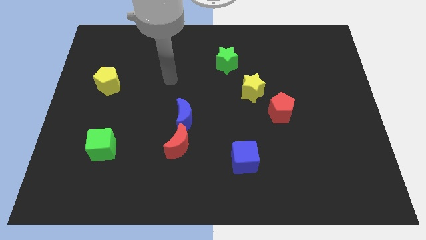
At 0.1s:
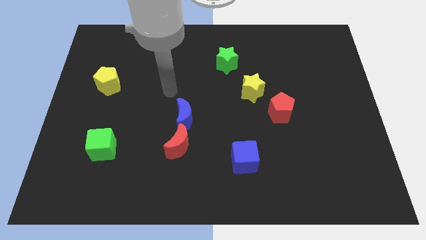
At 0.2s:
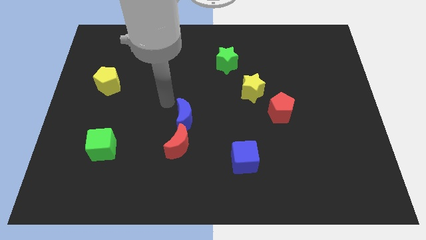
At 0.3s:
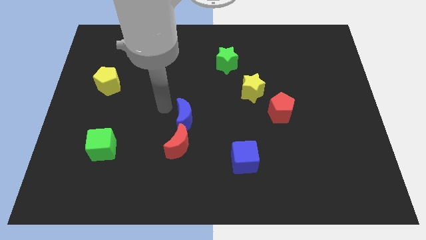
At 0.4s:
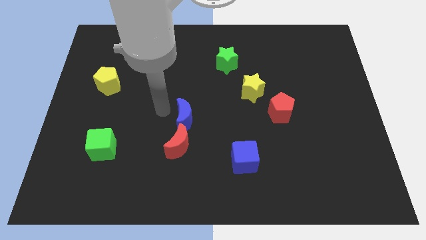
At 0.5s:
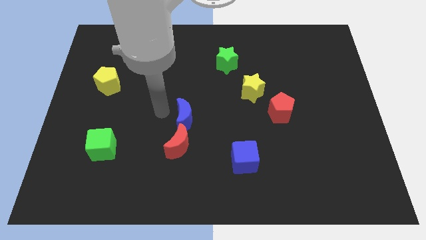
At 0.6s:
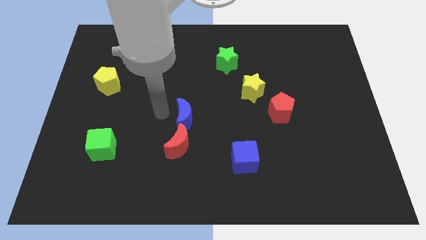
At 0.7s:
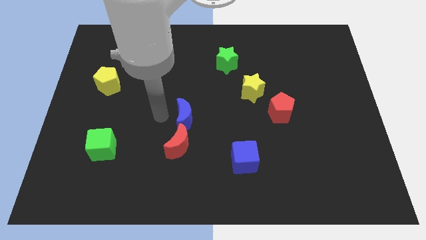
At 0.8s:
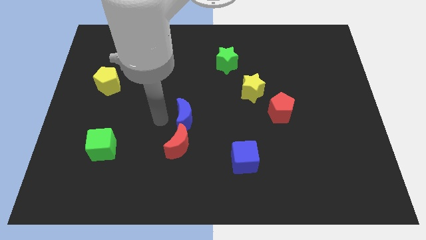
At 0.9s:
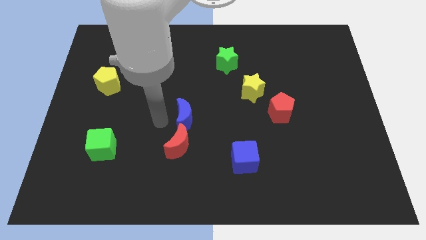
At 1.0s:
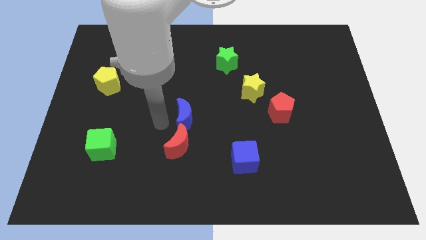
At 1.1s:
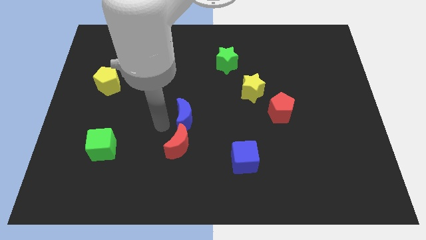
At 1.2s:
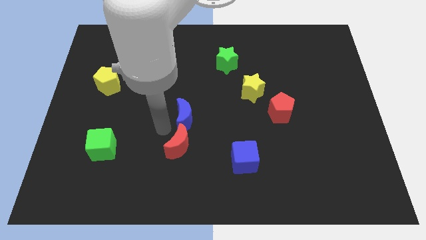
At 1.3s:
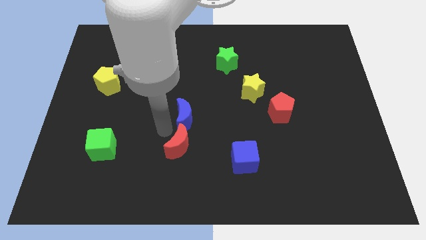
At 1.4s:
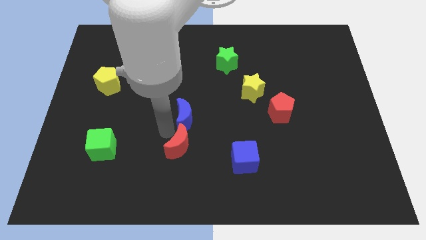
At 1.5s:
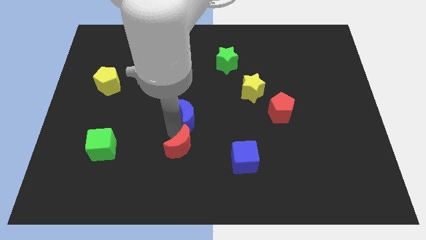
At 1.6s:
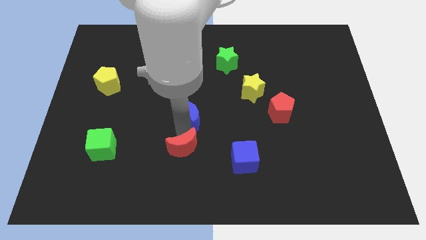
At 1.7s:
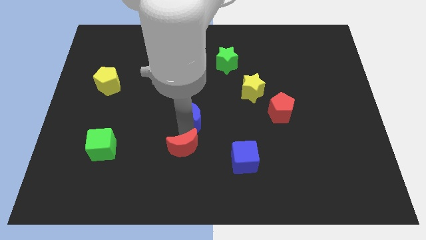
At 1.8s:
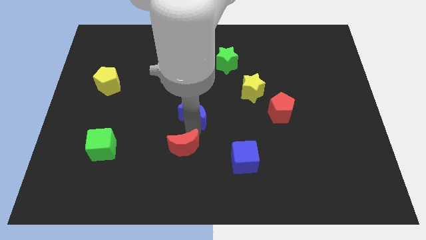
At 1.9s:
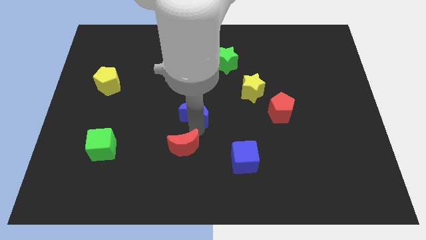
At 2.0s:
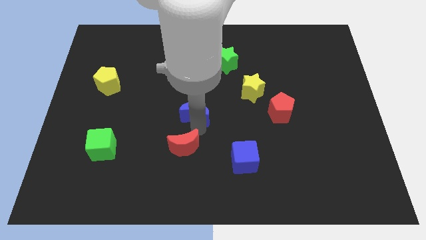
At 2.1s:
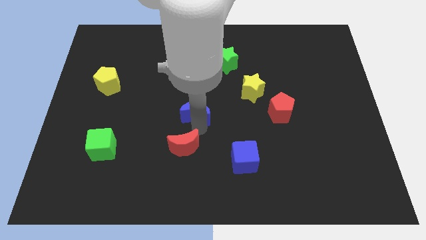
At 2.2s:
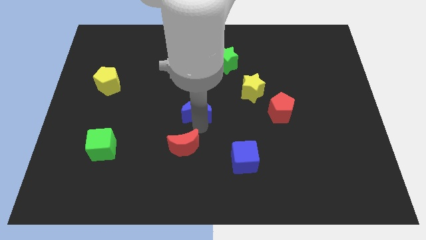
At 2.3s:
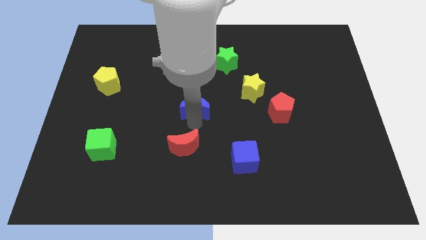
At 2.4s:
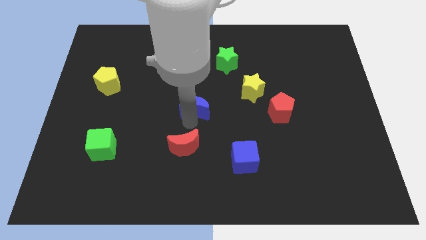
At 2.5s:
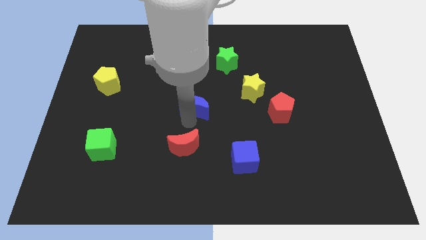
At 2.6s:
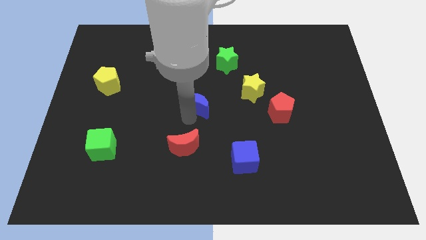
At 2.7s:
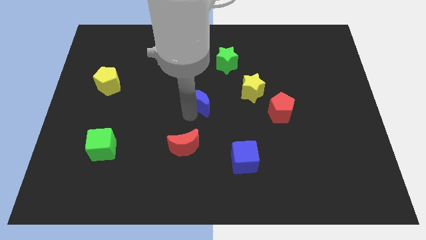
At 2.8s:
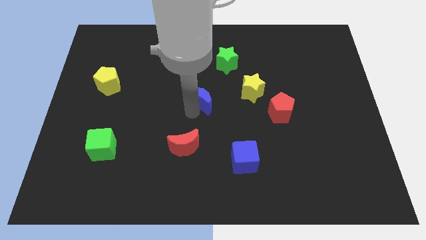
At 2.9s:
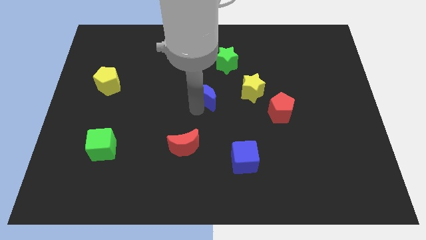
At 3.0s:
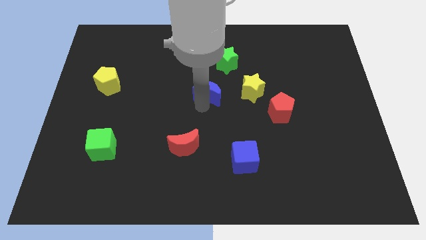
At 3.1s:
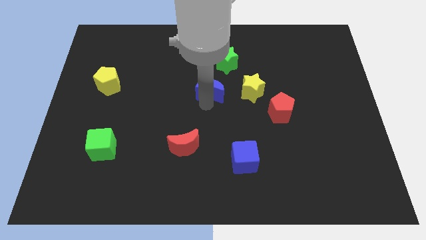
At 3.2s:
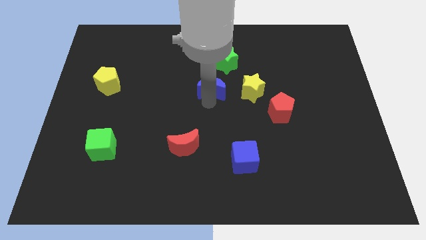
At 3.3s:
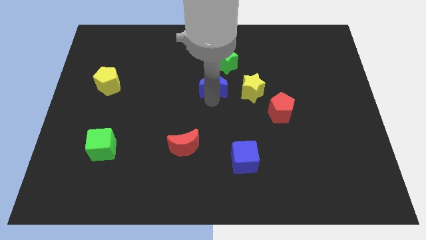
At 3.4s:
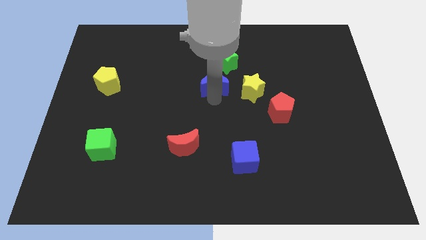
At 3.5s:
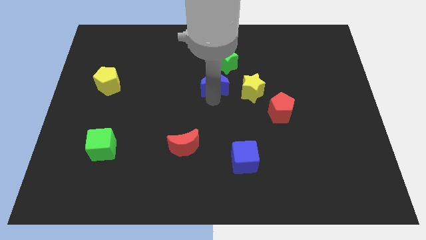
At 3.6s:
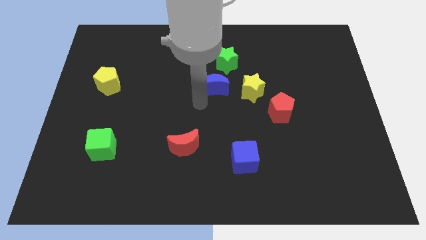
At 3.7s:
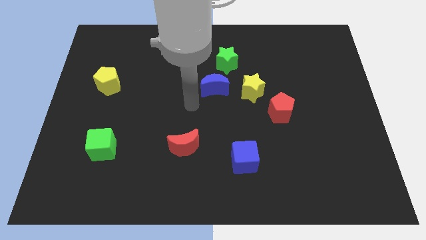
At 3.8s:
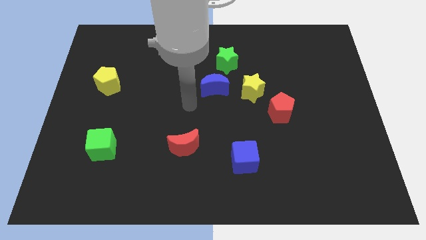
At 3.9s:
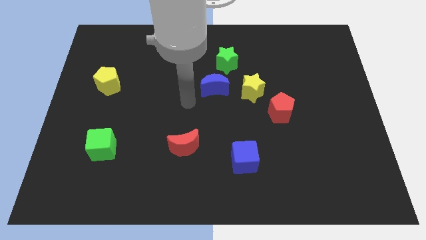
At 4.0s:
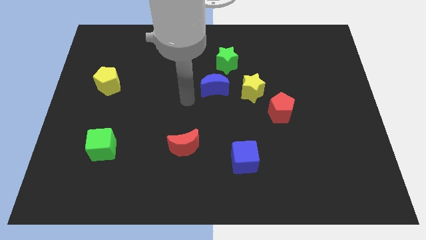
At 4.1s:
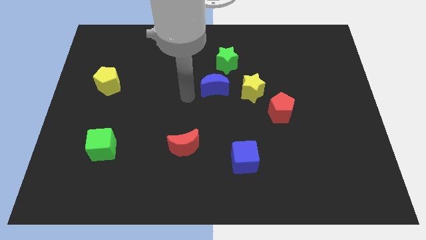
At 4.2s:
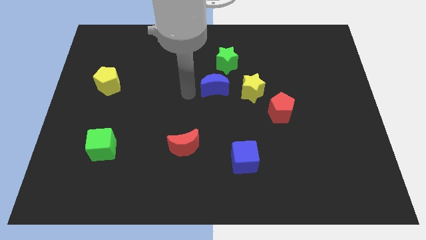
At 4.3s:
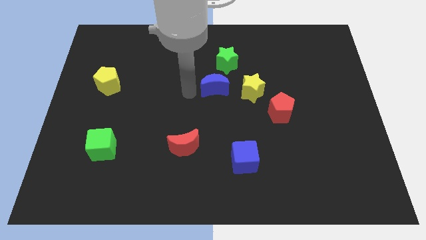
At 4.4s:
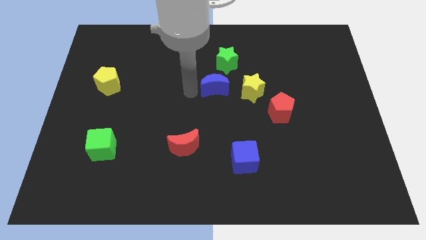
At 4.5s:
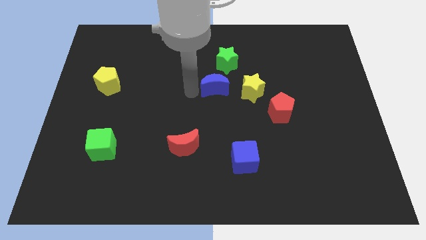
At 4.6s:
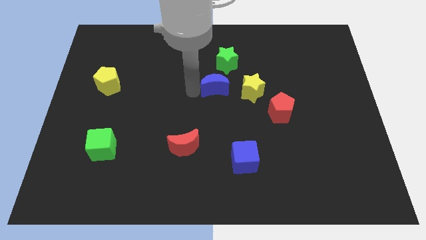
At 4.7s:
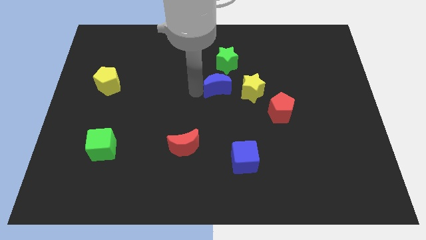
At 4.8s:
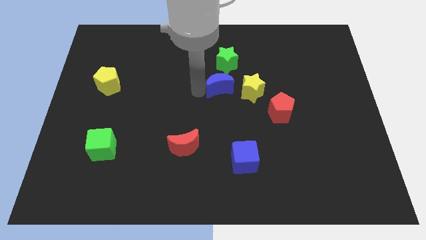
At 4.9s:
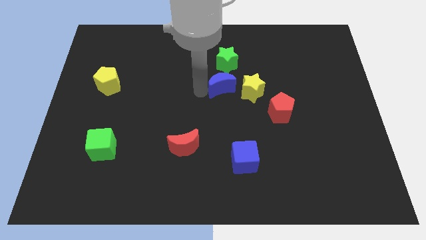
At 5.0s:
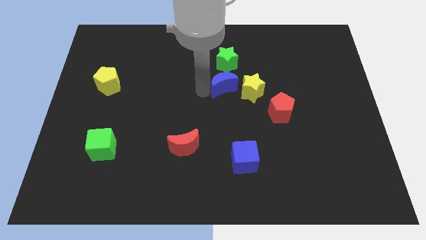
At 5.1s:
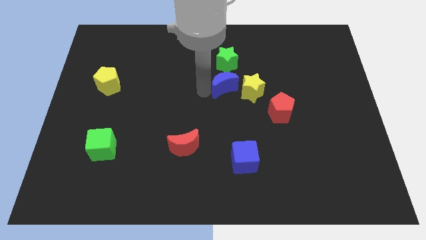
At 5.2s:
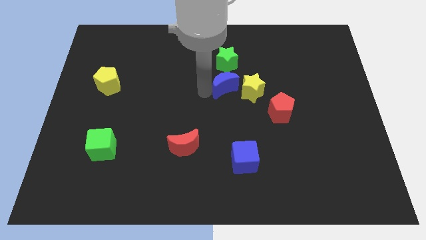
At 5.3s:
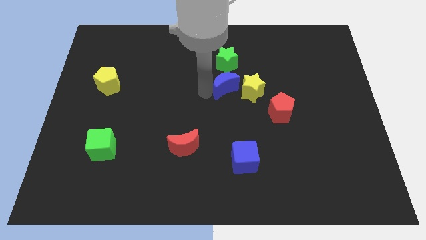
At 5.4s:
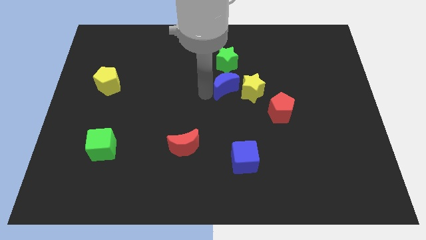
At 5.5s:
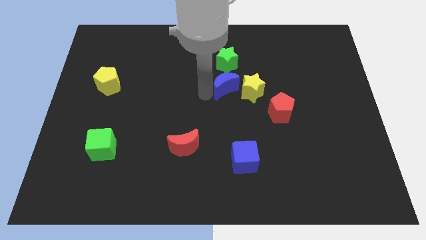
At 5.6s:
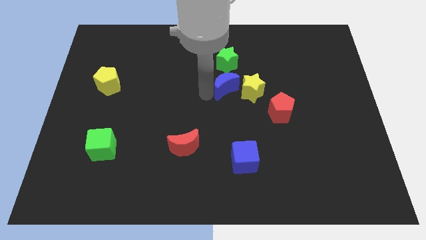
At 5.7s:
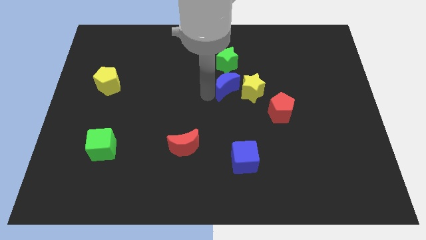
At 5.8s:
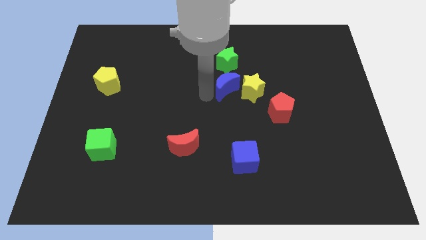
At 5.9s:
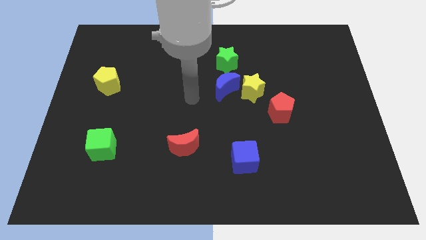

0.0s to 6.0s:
push the blue crescent in between the green star and yellow star

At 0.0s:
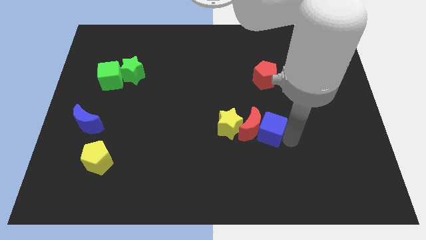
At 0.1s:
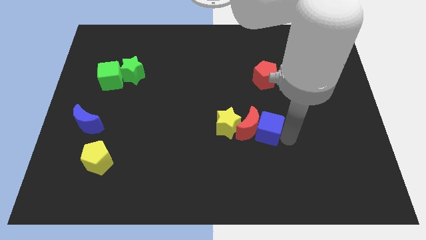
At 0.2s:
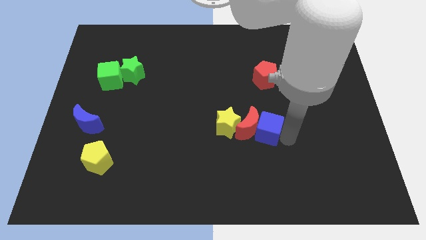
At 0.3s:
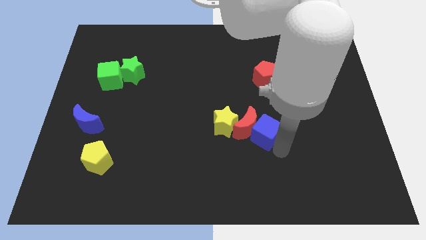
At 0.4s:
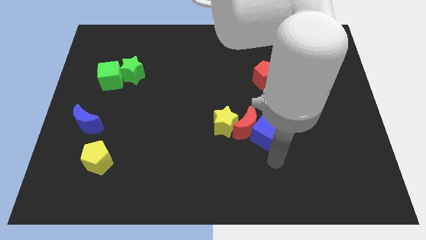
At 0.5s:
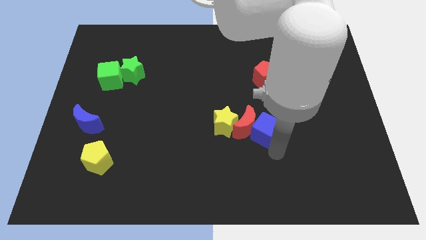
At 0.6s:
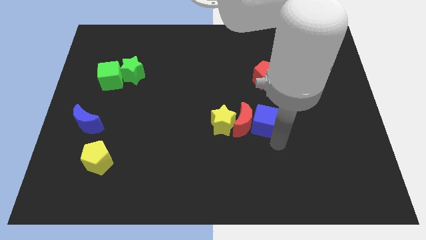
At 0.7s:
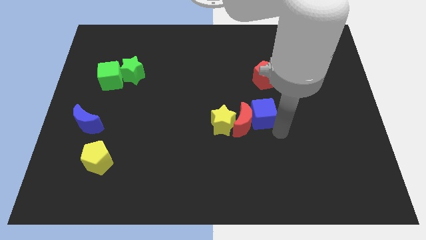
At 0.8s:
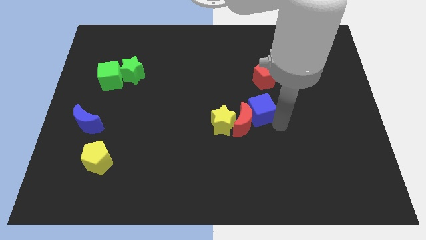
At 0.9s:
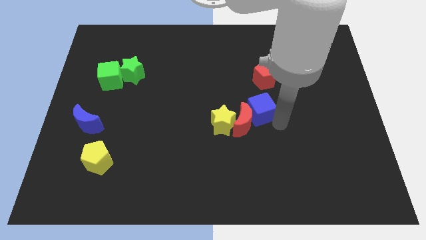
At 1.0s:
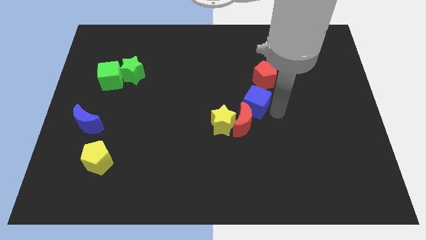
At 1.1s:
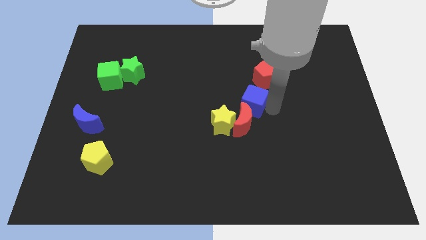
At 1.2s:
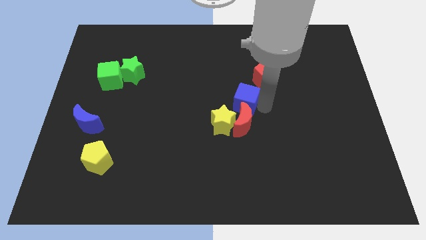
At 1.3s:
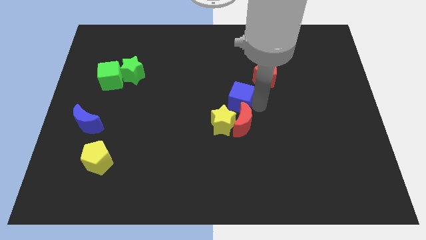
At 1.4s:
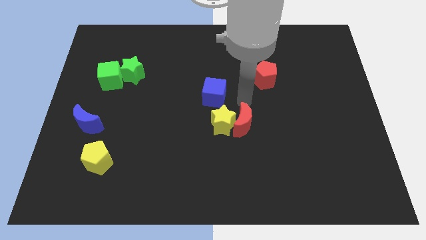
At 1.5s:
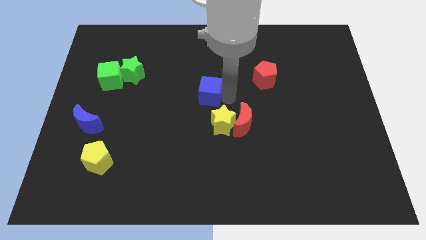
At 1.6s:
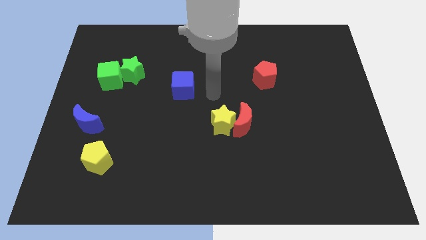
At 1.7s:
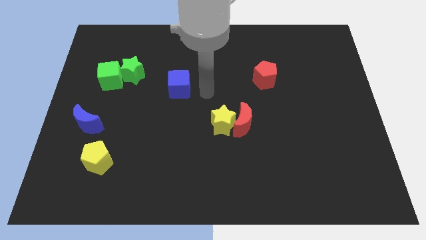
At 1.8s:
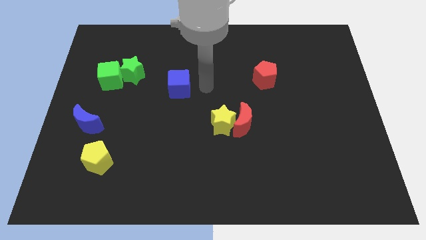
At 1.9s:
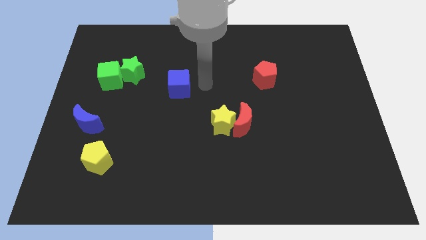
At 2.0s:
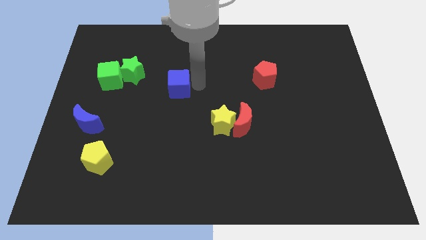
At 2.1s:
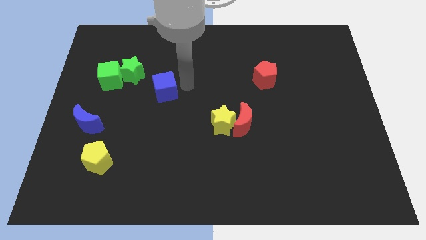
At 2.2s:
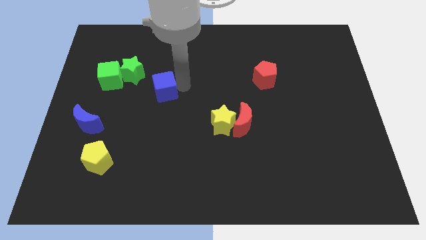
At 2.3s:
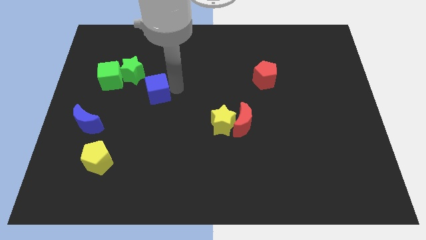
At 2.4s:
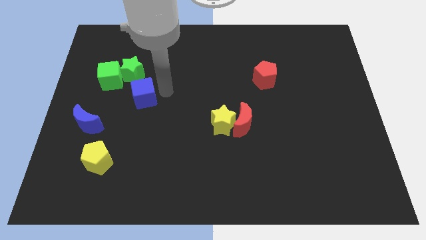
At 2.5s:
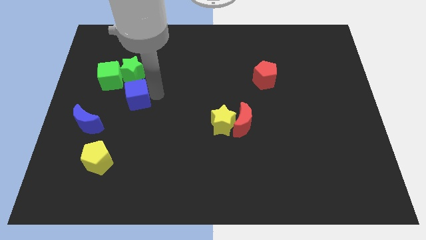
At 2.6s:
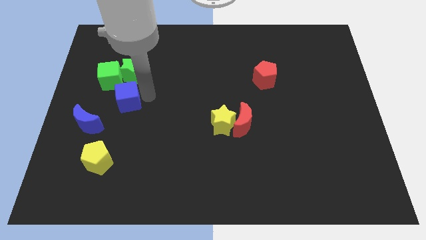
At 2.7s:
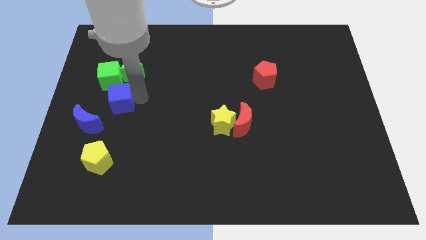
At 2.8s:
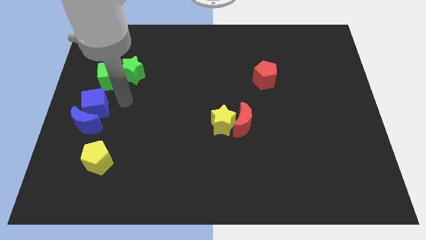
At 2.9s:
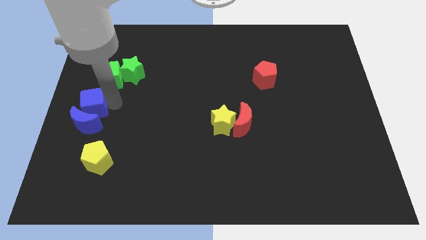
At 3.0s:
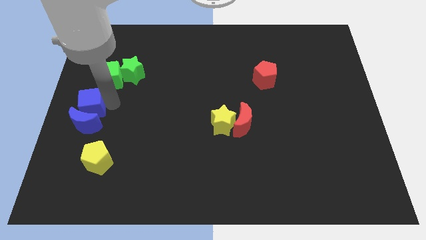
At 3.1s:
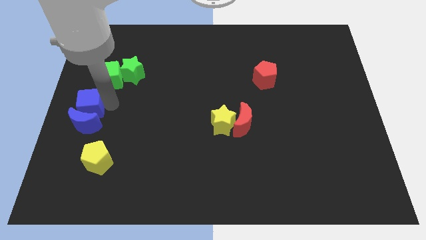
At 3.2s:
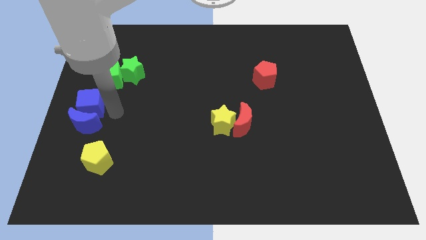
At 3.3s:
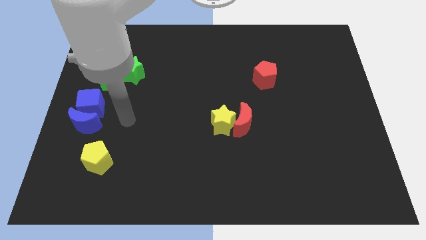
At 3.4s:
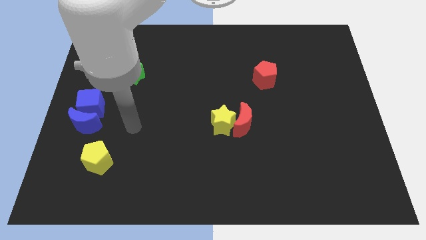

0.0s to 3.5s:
move the blue cube to the top of the blue crescent
